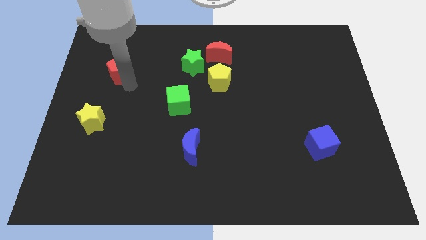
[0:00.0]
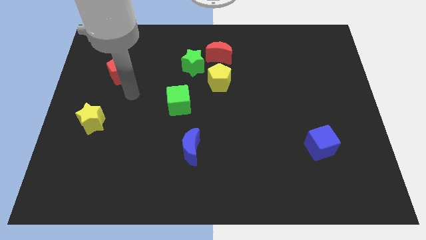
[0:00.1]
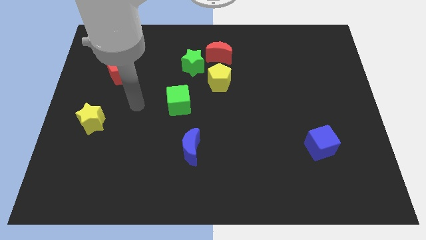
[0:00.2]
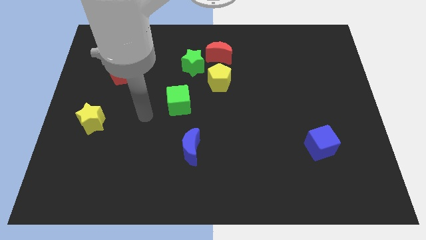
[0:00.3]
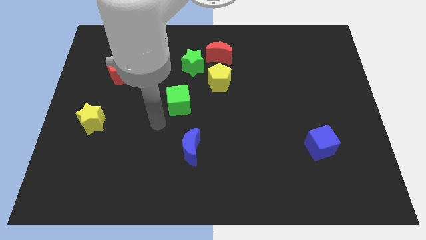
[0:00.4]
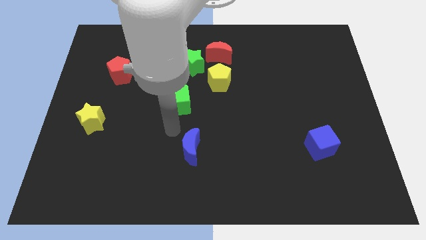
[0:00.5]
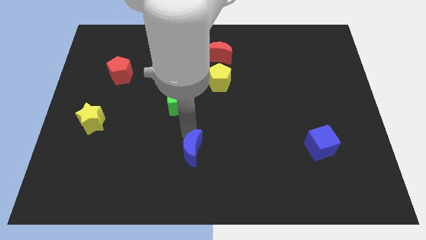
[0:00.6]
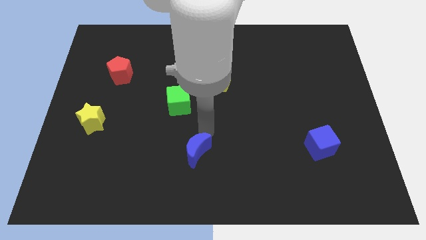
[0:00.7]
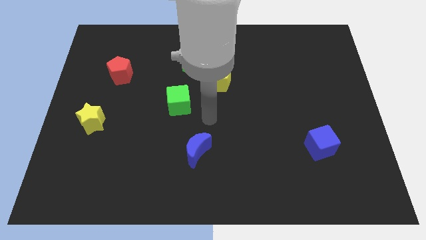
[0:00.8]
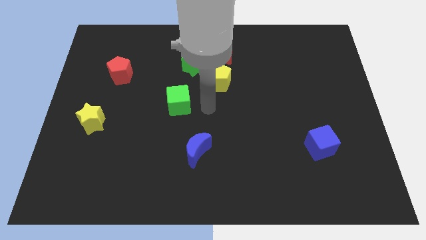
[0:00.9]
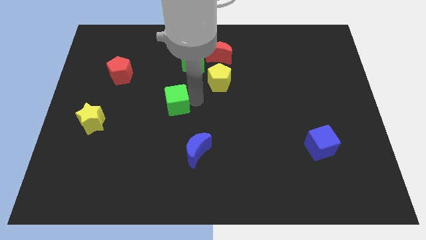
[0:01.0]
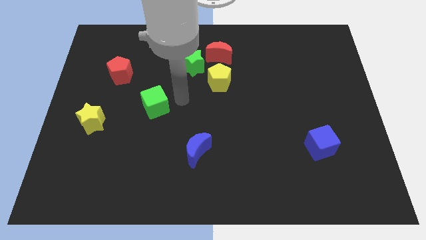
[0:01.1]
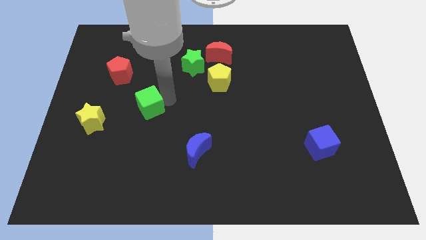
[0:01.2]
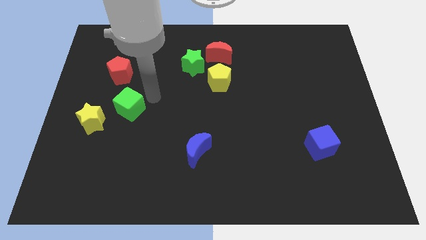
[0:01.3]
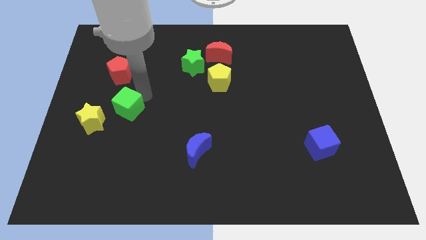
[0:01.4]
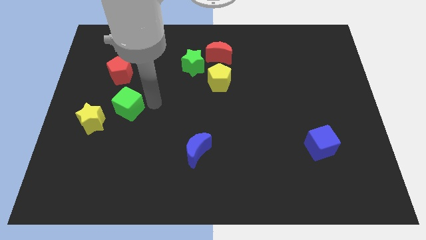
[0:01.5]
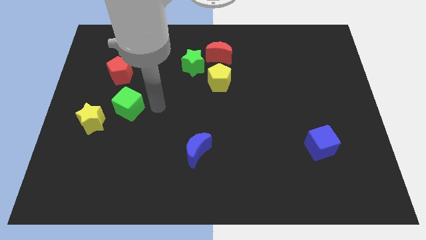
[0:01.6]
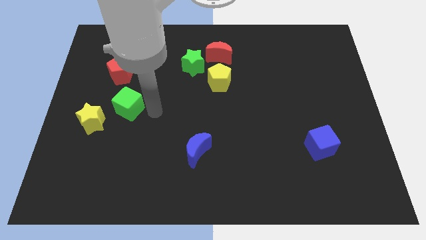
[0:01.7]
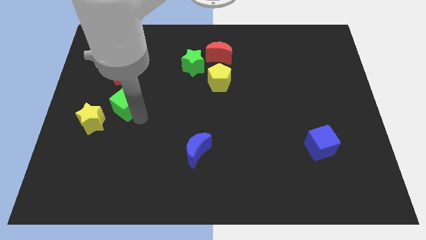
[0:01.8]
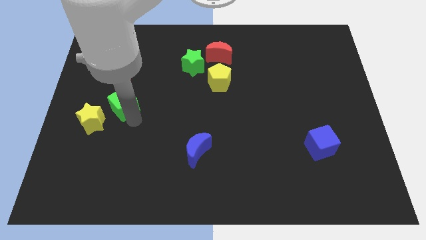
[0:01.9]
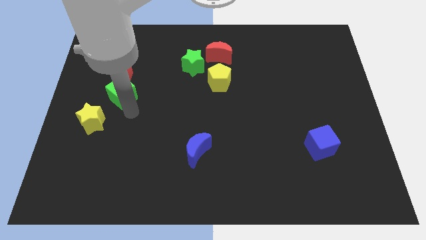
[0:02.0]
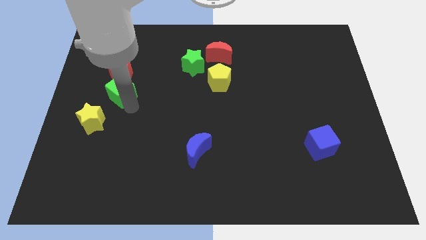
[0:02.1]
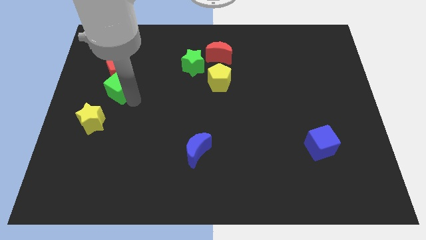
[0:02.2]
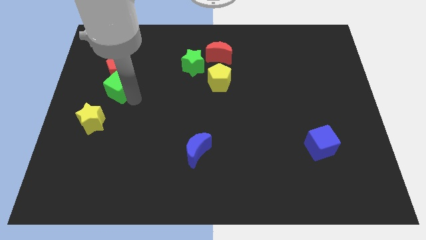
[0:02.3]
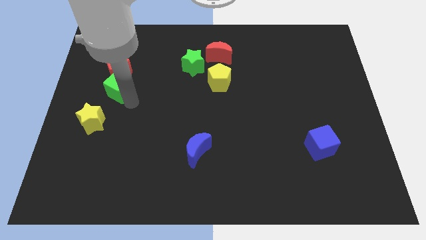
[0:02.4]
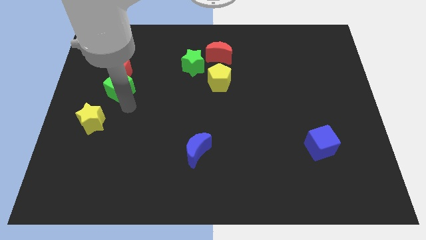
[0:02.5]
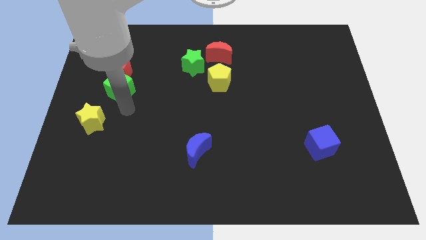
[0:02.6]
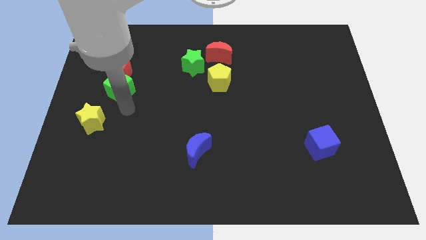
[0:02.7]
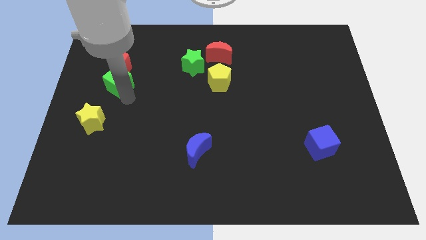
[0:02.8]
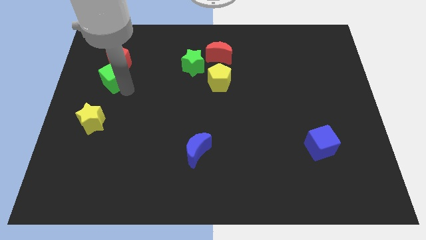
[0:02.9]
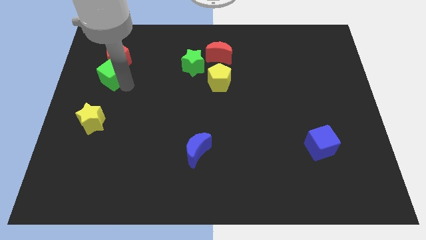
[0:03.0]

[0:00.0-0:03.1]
push the green cube into the red pentagon

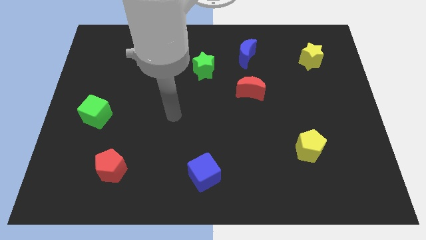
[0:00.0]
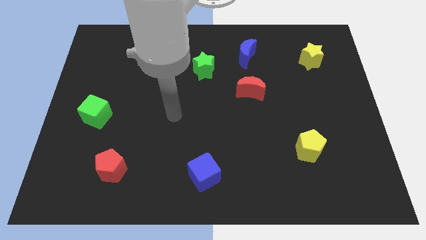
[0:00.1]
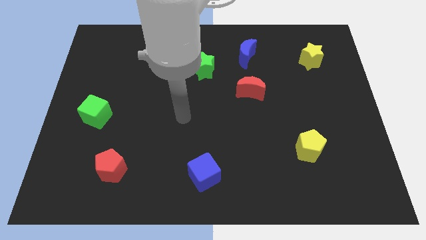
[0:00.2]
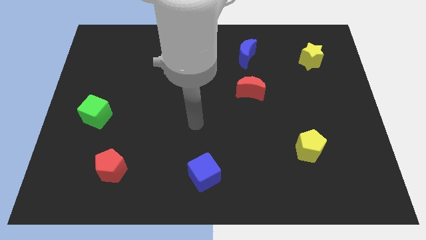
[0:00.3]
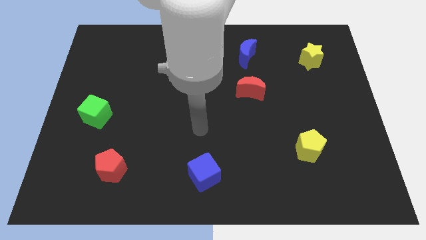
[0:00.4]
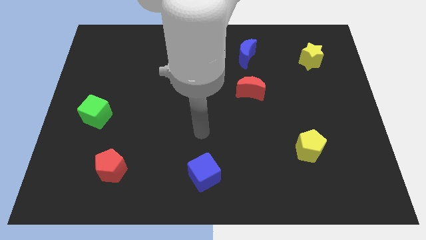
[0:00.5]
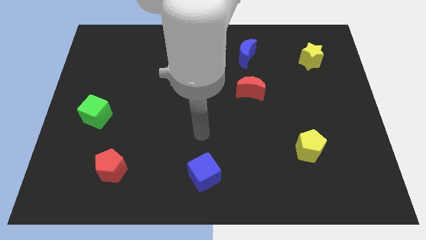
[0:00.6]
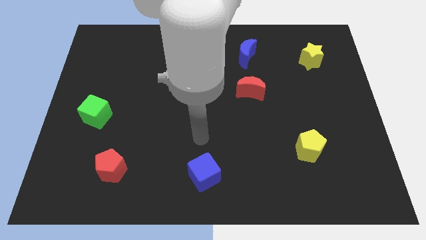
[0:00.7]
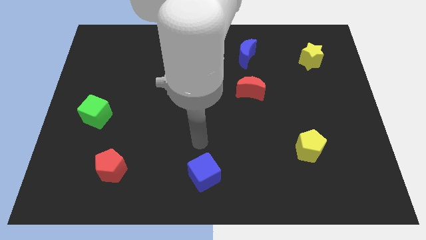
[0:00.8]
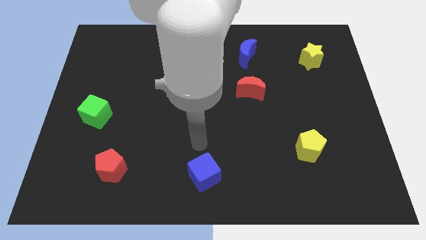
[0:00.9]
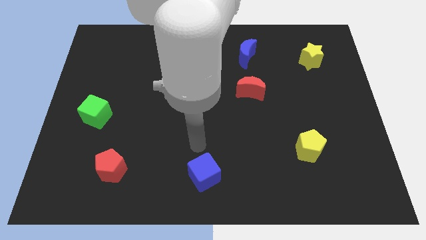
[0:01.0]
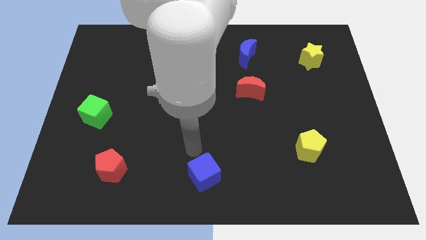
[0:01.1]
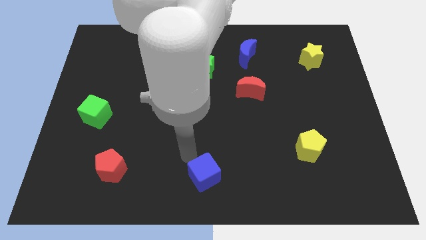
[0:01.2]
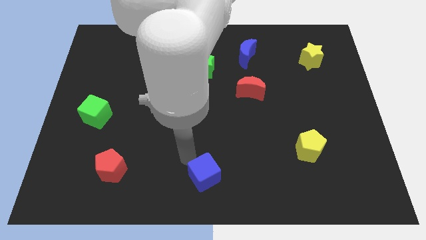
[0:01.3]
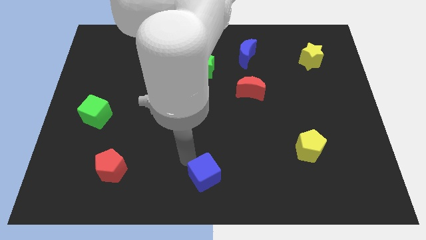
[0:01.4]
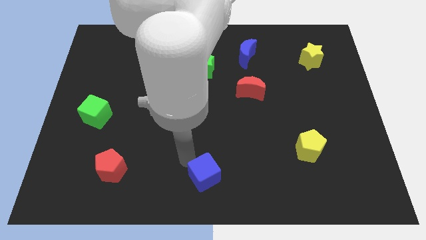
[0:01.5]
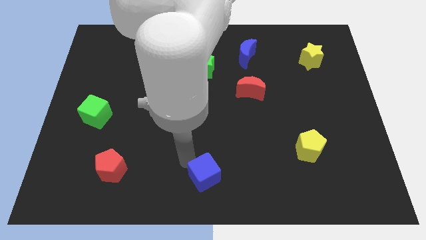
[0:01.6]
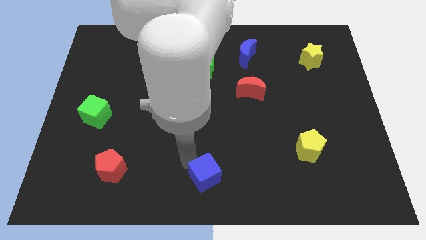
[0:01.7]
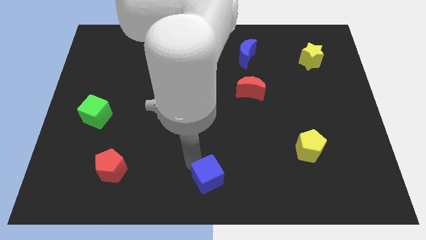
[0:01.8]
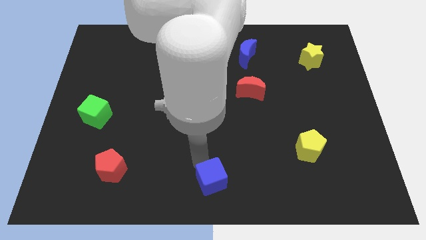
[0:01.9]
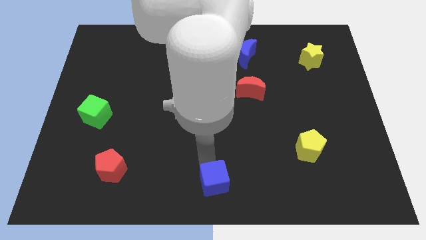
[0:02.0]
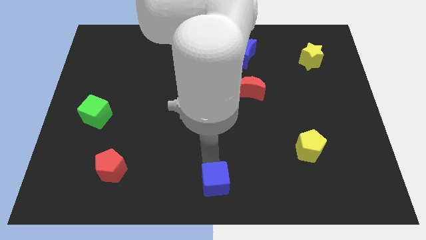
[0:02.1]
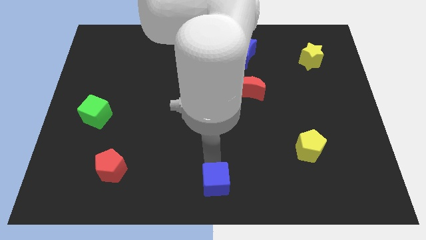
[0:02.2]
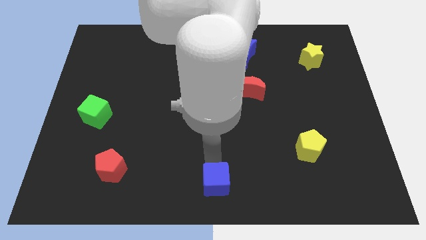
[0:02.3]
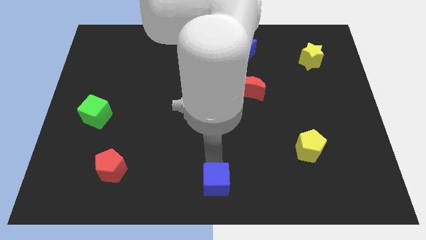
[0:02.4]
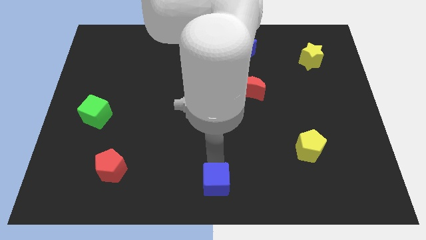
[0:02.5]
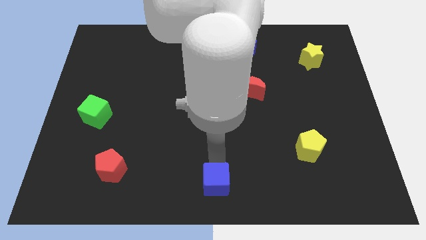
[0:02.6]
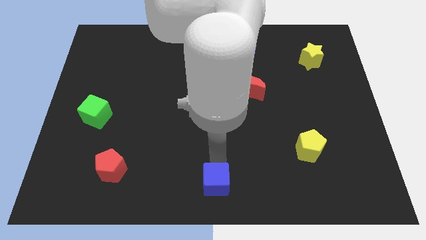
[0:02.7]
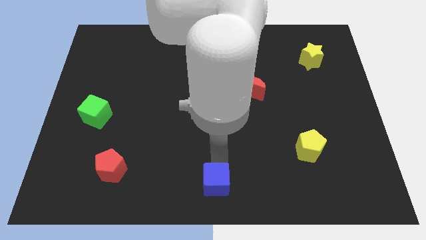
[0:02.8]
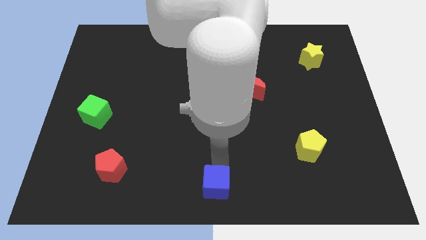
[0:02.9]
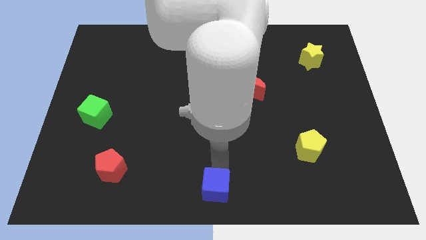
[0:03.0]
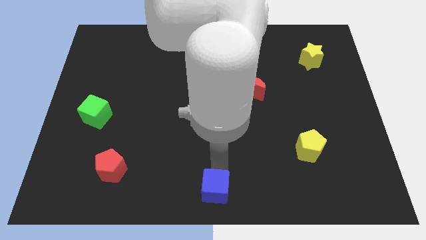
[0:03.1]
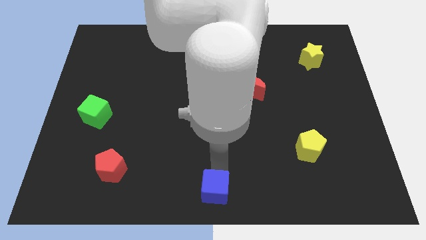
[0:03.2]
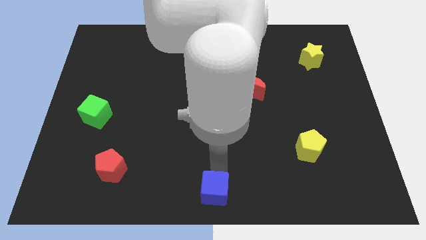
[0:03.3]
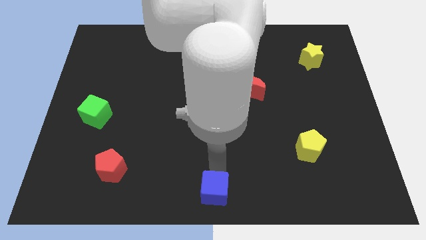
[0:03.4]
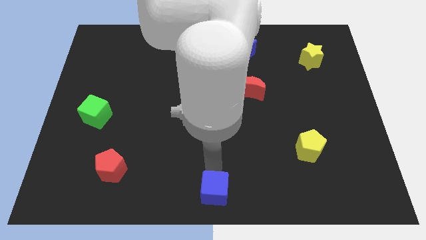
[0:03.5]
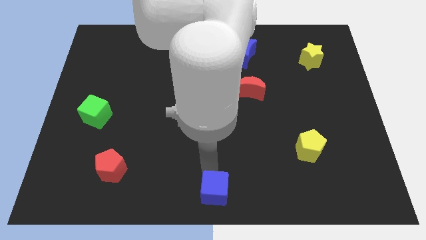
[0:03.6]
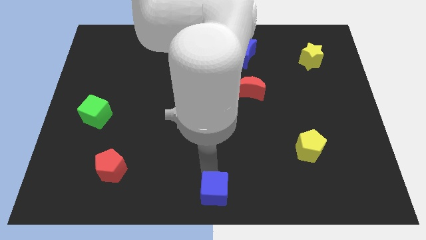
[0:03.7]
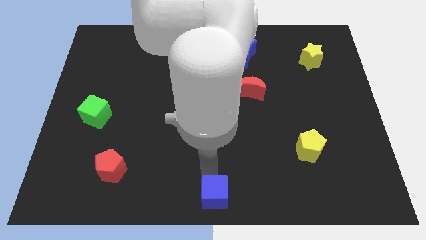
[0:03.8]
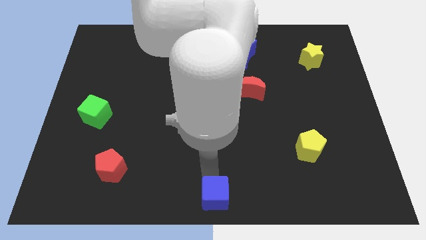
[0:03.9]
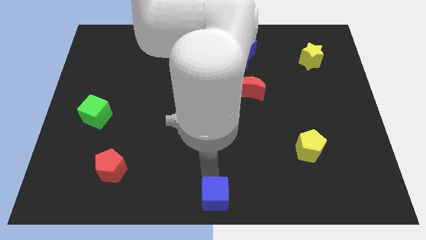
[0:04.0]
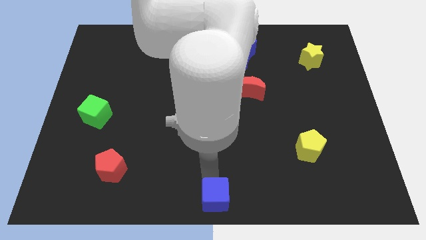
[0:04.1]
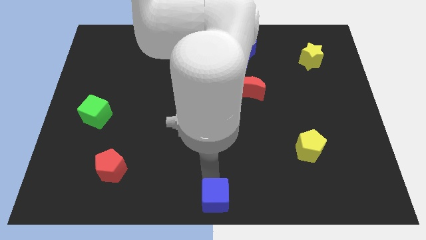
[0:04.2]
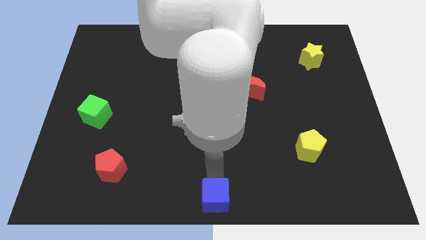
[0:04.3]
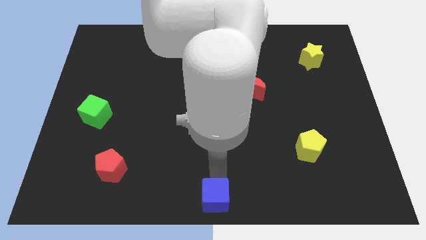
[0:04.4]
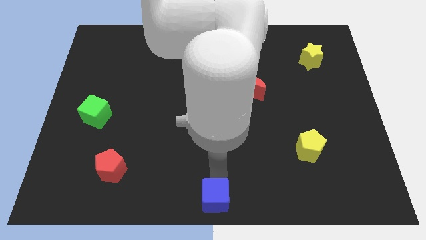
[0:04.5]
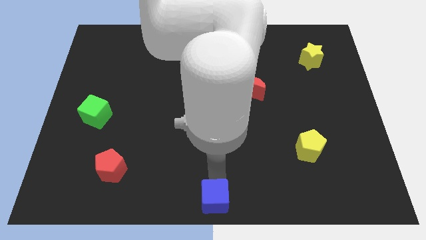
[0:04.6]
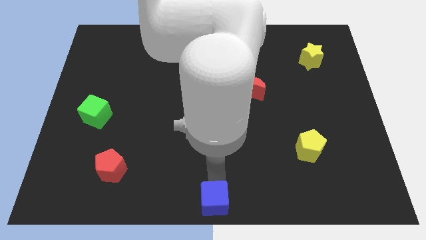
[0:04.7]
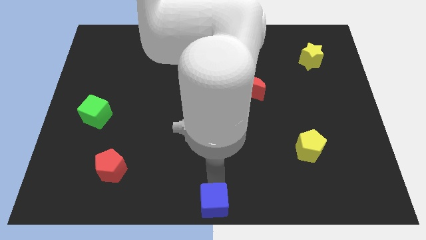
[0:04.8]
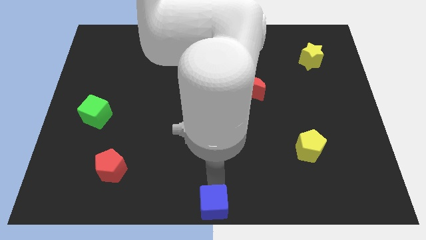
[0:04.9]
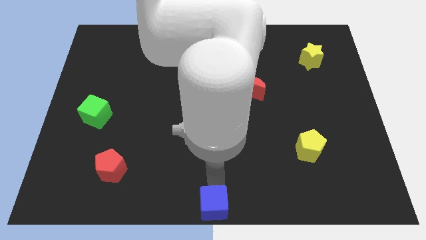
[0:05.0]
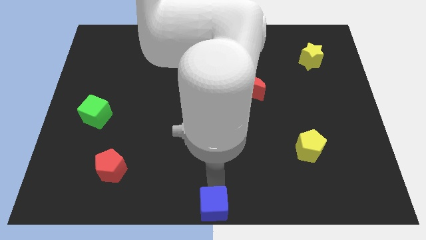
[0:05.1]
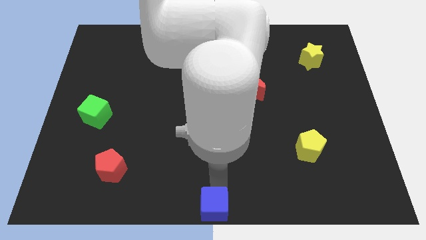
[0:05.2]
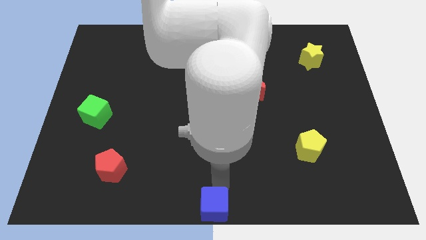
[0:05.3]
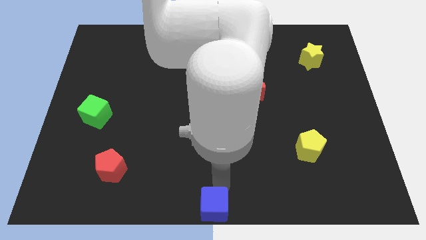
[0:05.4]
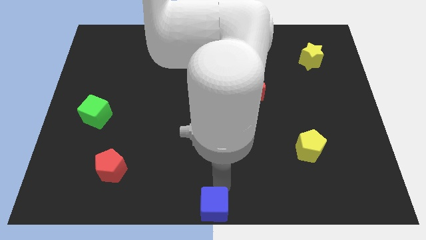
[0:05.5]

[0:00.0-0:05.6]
move the blue cube to the bottom center

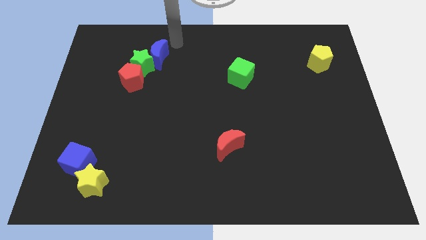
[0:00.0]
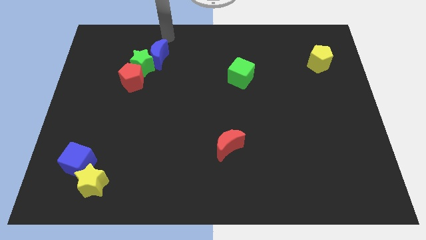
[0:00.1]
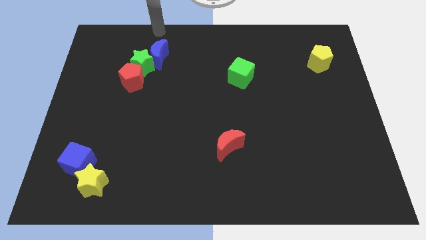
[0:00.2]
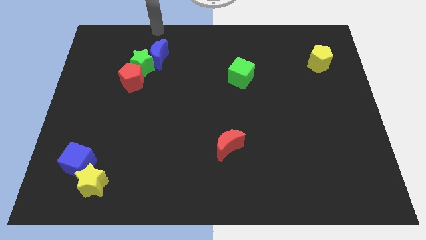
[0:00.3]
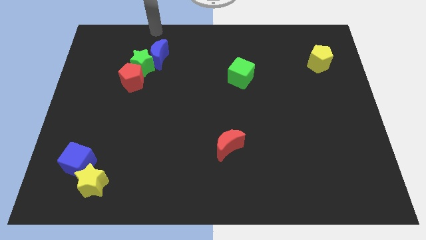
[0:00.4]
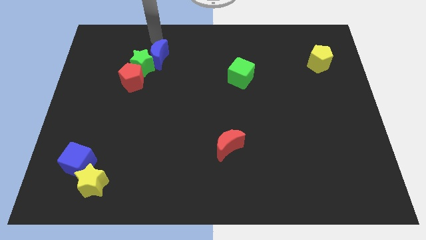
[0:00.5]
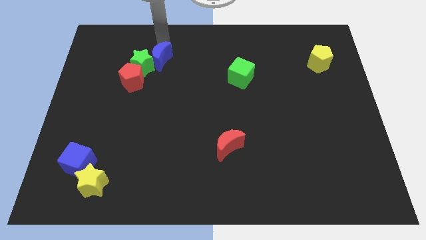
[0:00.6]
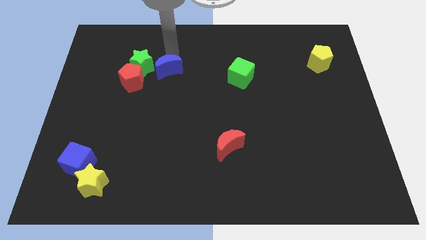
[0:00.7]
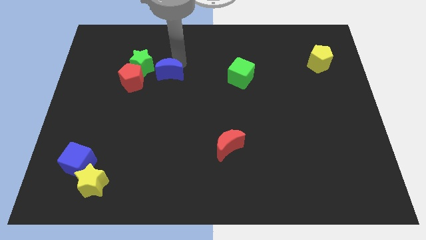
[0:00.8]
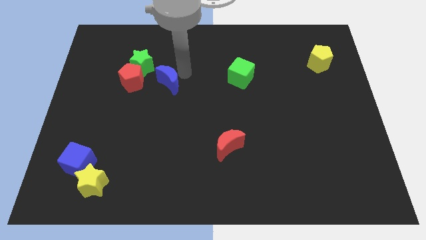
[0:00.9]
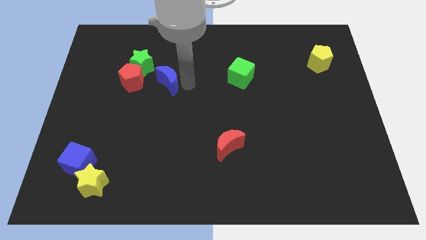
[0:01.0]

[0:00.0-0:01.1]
separate blue moon from green star
